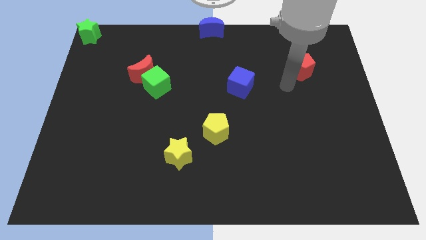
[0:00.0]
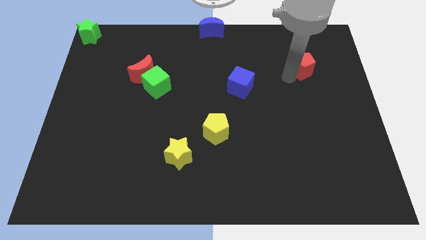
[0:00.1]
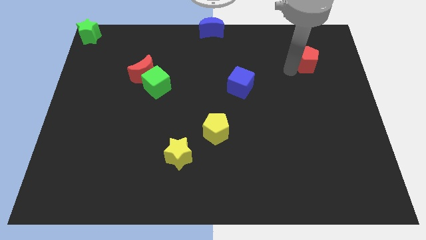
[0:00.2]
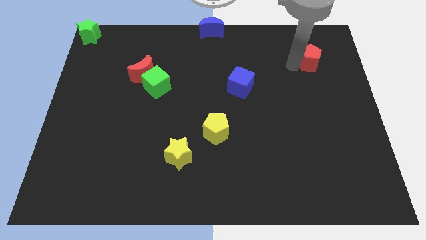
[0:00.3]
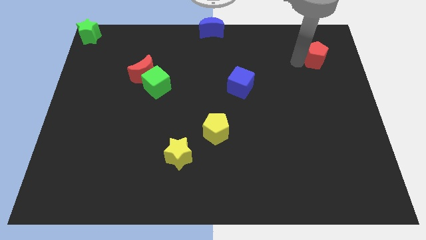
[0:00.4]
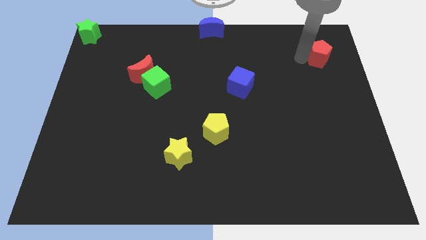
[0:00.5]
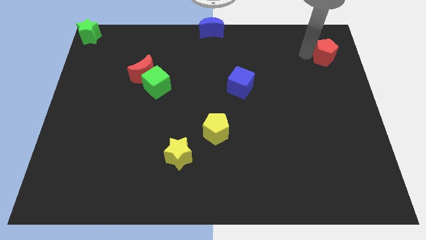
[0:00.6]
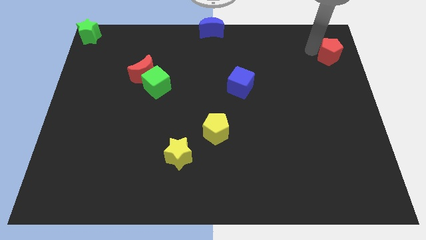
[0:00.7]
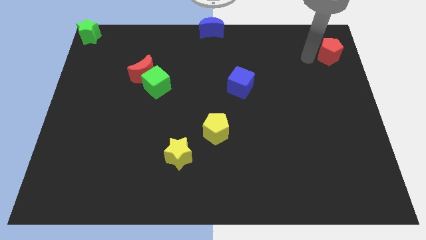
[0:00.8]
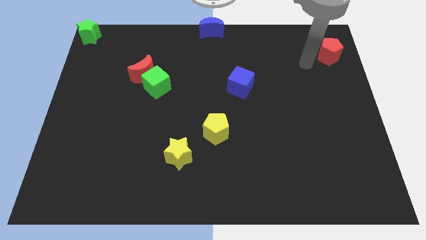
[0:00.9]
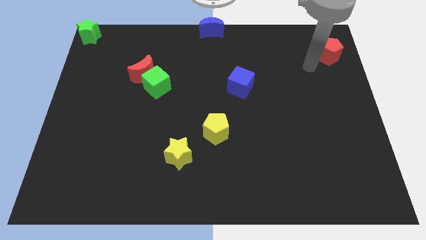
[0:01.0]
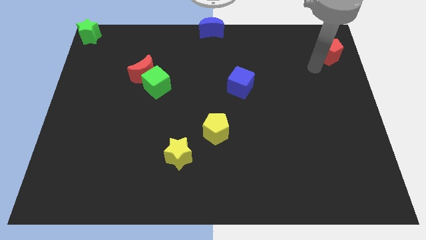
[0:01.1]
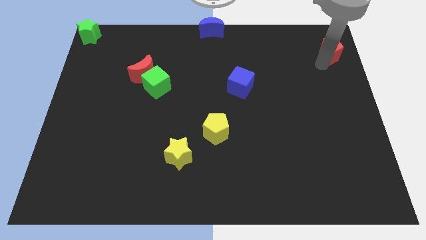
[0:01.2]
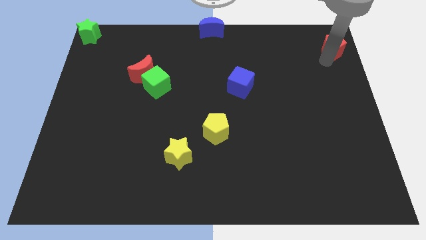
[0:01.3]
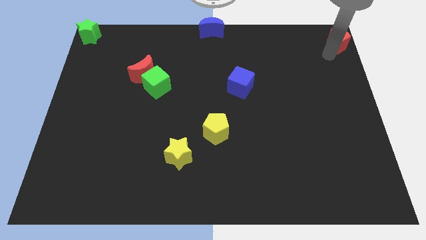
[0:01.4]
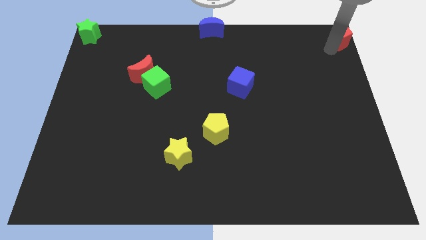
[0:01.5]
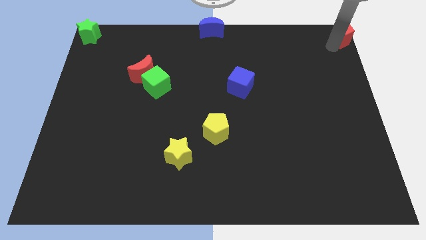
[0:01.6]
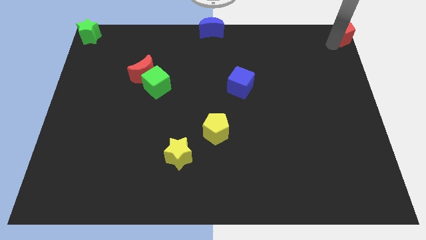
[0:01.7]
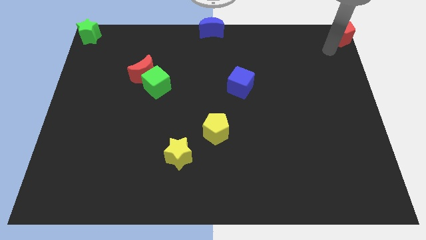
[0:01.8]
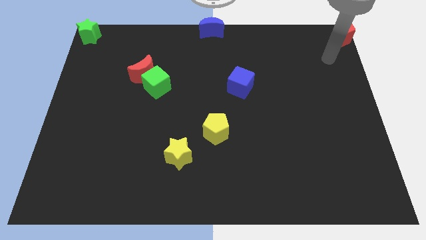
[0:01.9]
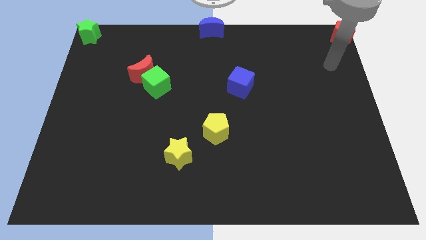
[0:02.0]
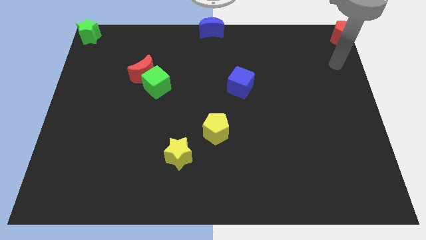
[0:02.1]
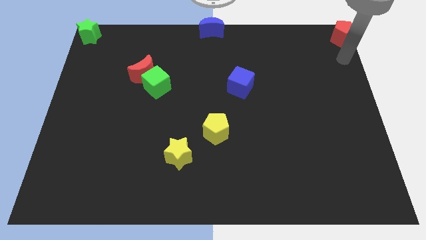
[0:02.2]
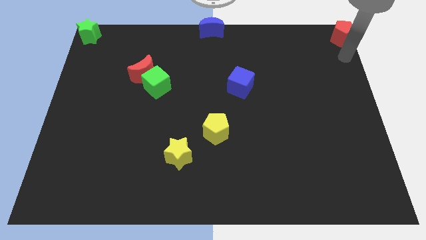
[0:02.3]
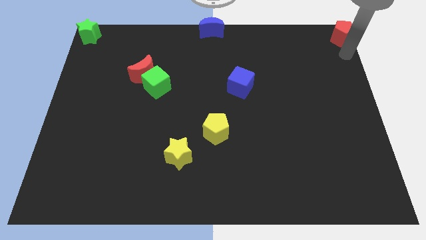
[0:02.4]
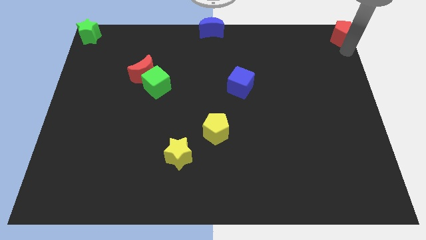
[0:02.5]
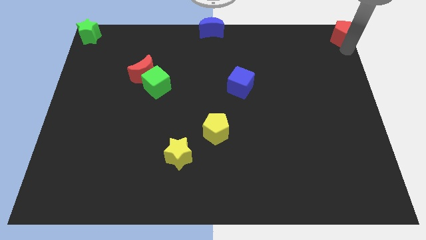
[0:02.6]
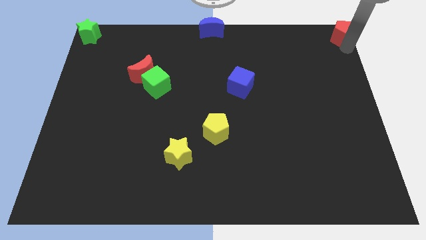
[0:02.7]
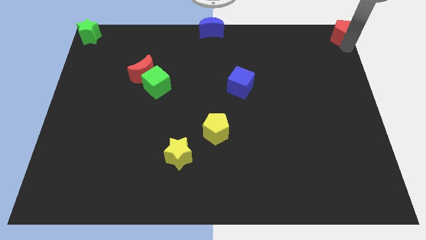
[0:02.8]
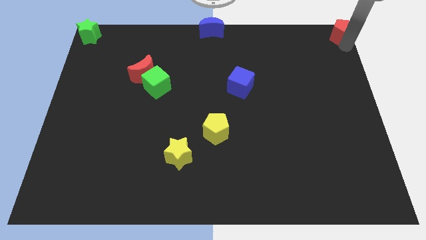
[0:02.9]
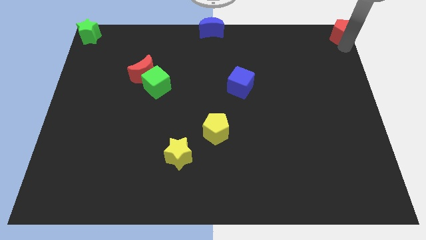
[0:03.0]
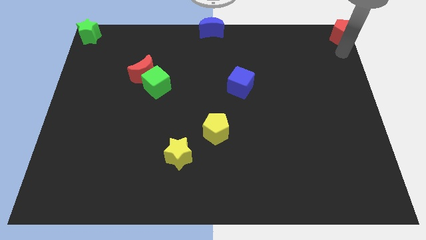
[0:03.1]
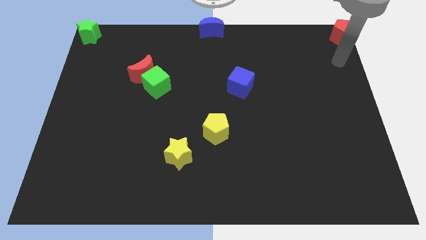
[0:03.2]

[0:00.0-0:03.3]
place the red pentagon at the top right corner

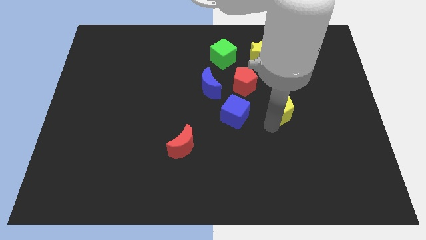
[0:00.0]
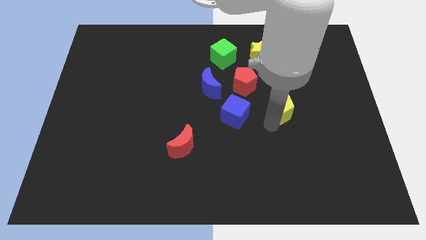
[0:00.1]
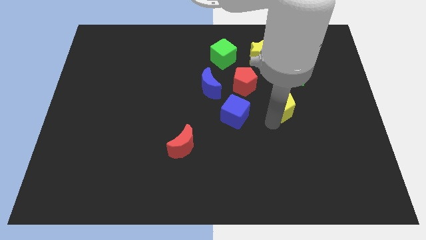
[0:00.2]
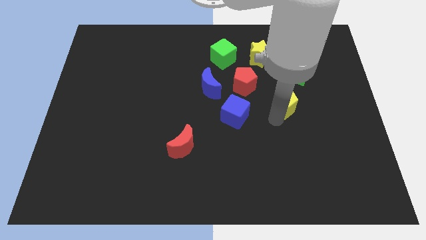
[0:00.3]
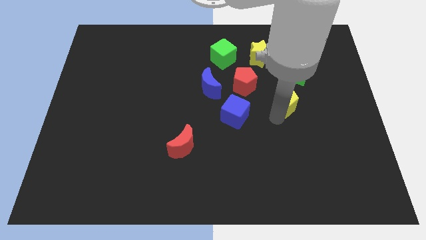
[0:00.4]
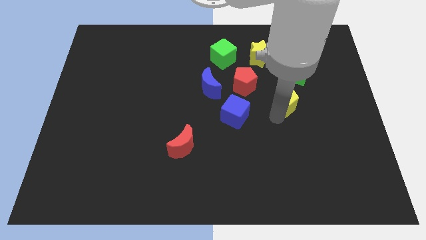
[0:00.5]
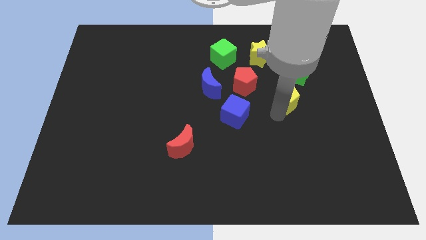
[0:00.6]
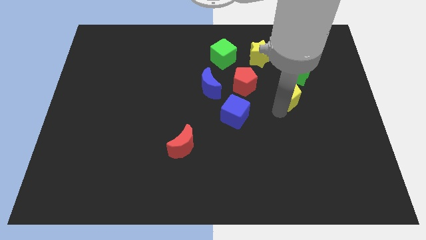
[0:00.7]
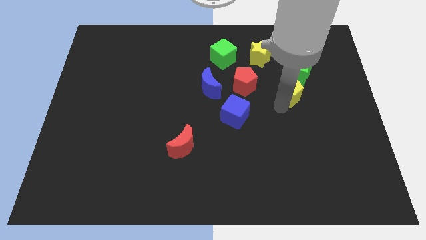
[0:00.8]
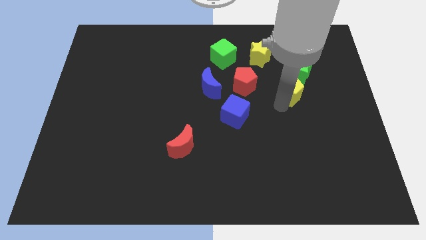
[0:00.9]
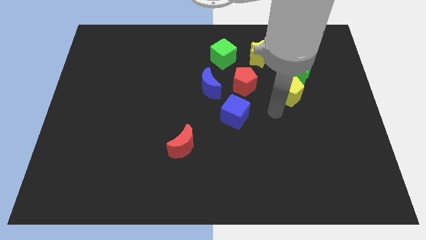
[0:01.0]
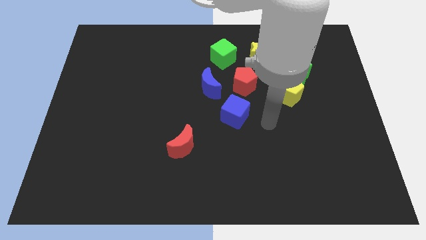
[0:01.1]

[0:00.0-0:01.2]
push the yellow pentagon diagonally below green star

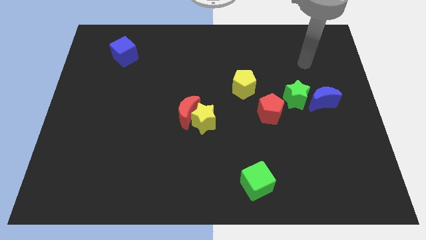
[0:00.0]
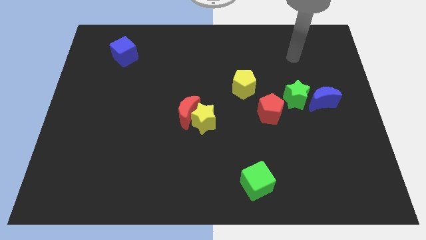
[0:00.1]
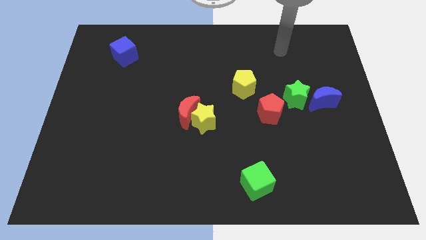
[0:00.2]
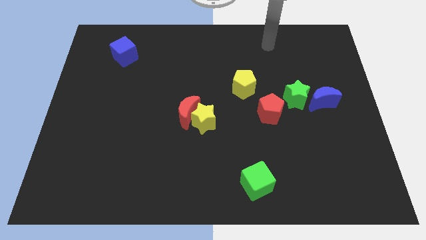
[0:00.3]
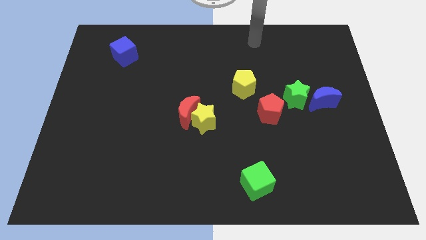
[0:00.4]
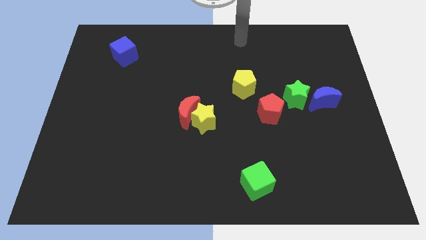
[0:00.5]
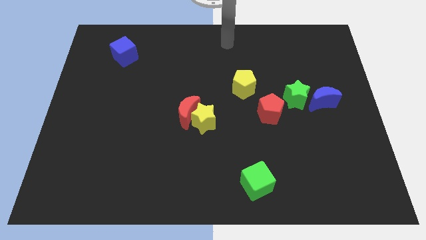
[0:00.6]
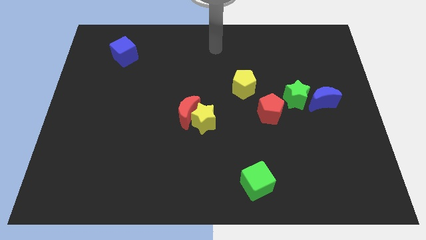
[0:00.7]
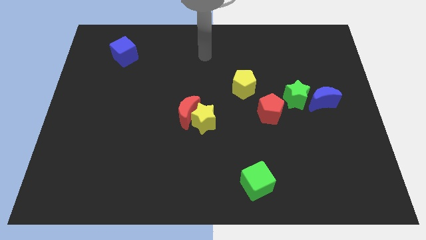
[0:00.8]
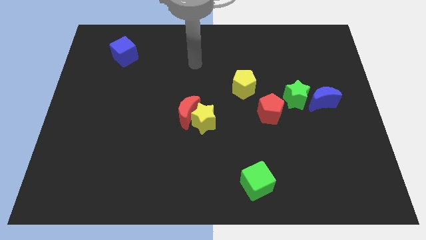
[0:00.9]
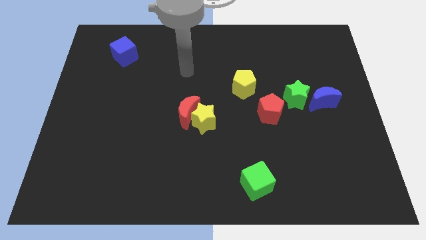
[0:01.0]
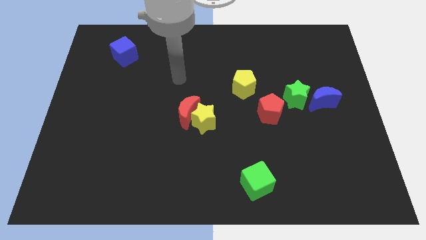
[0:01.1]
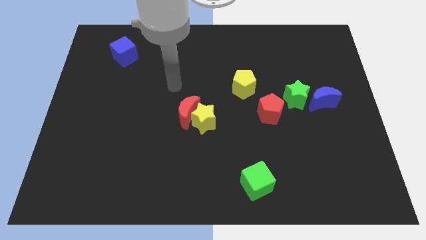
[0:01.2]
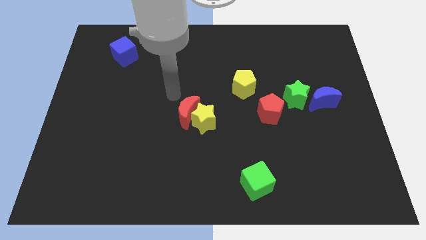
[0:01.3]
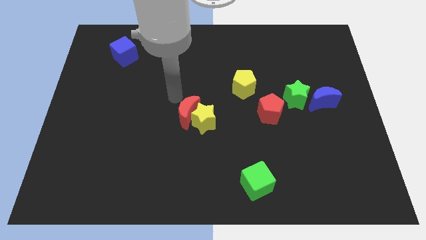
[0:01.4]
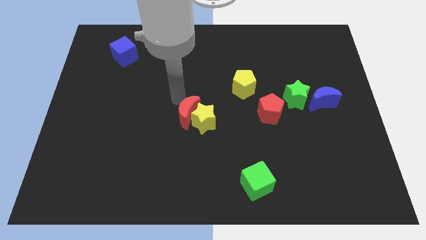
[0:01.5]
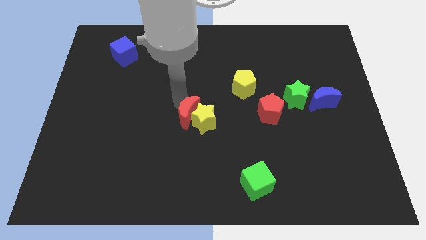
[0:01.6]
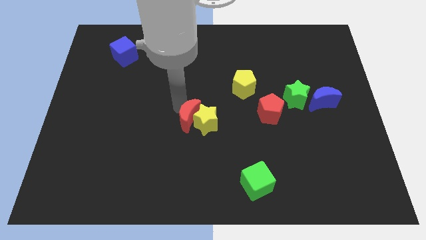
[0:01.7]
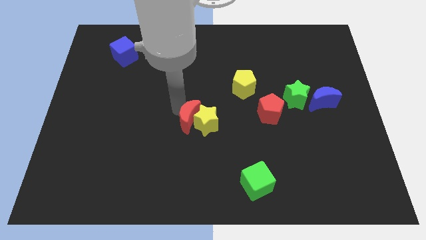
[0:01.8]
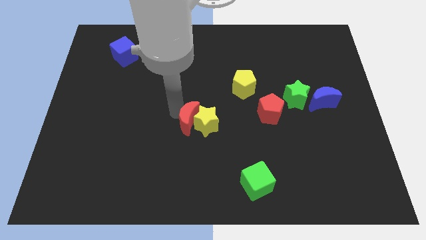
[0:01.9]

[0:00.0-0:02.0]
put your hand to the left of the red moon

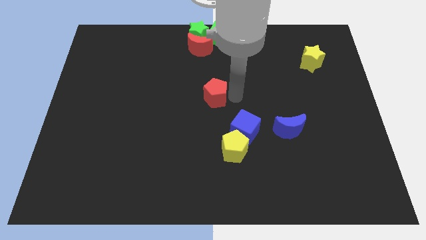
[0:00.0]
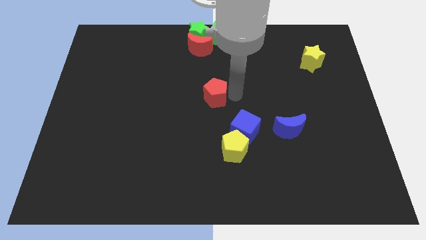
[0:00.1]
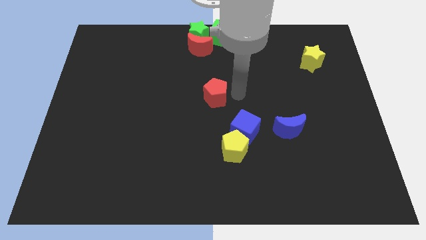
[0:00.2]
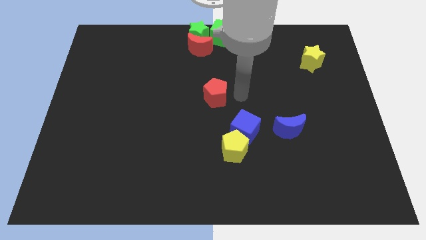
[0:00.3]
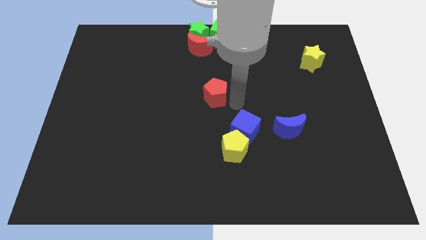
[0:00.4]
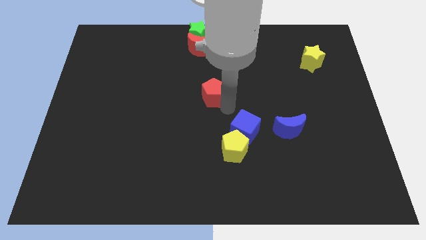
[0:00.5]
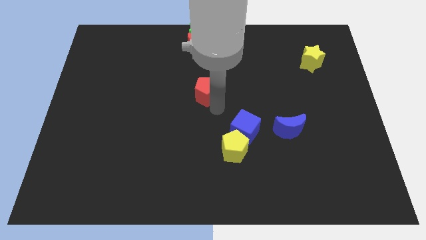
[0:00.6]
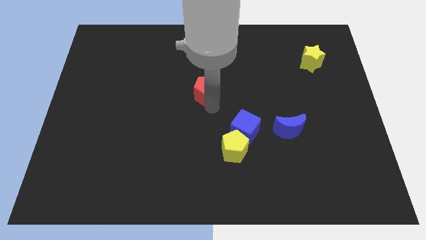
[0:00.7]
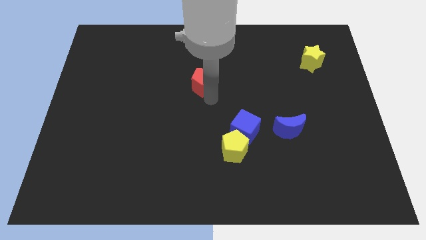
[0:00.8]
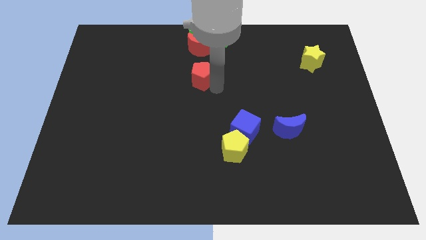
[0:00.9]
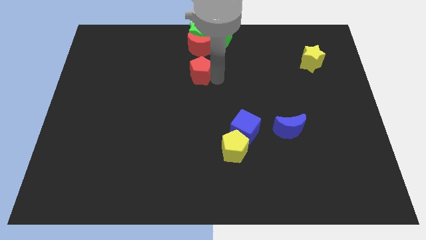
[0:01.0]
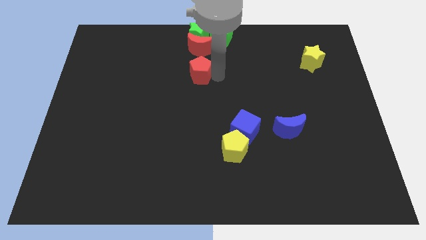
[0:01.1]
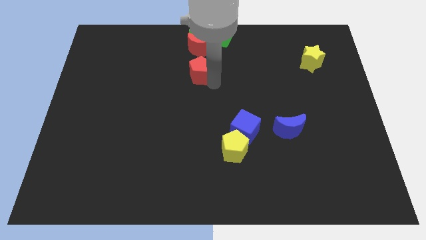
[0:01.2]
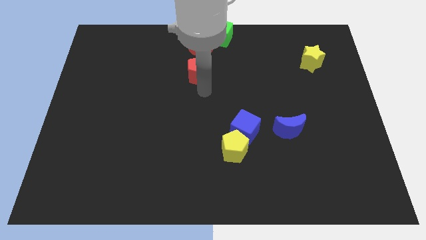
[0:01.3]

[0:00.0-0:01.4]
move the red pentagon towards the red crescent

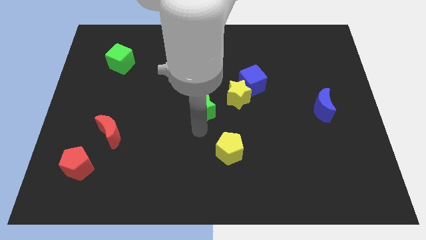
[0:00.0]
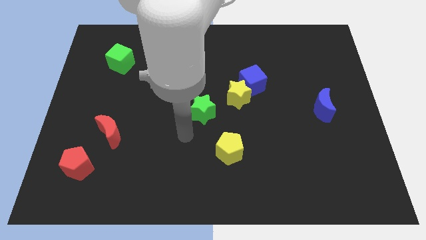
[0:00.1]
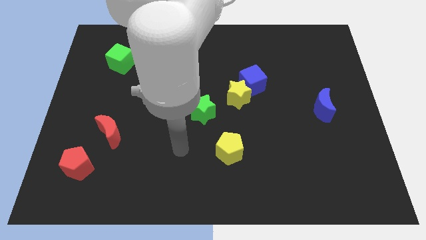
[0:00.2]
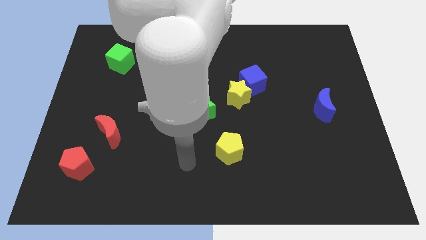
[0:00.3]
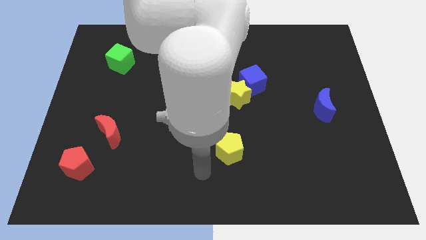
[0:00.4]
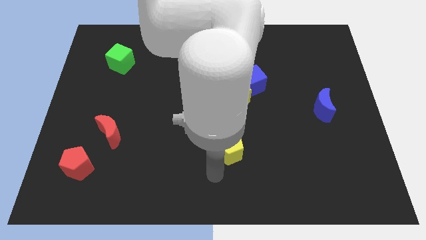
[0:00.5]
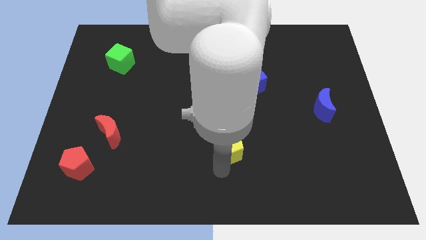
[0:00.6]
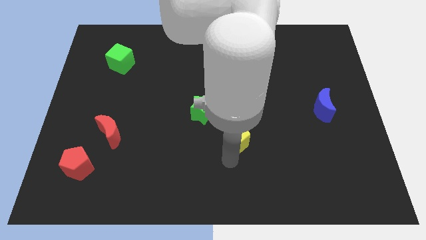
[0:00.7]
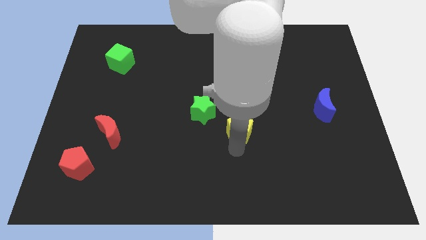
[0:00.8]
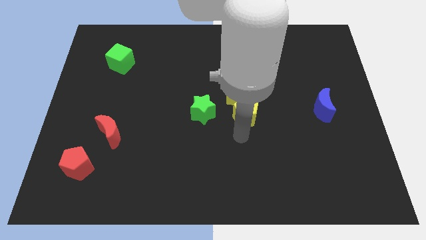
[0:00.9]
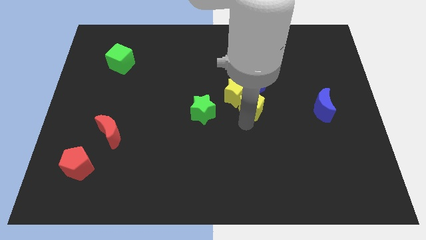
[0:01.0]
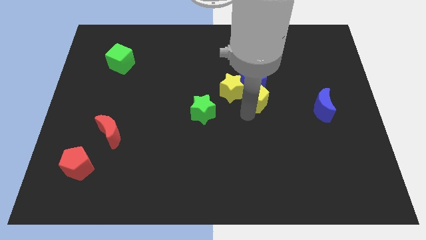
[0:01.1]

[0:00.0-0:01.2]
push the yellow pentagon close to the yellow star
